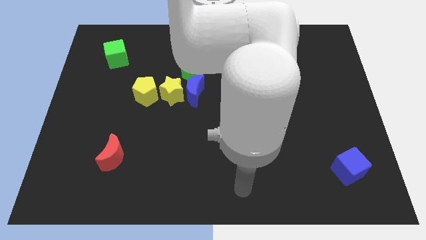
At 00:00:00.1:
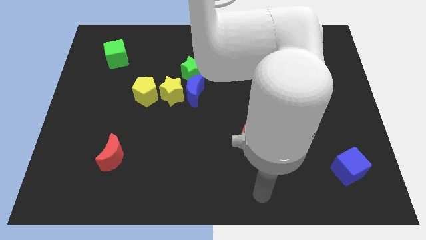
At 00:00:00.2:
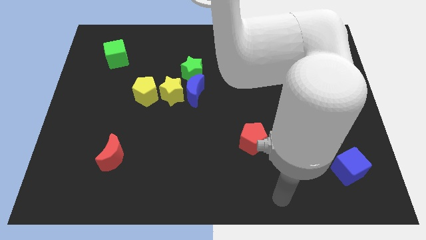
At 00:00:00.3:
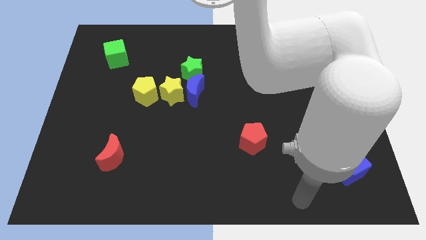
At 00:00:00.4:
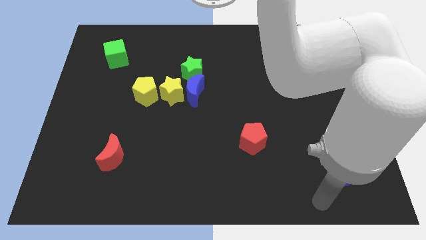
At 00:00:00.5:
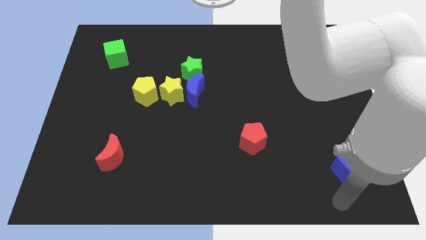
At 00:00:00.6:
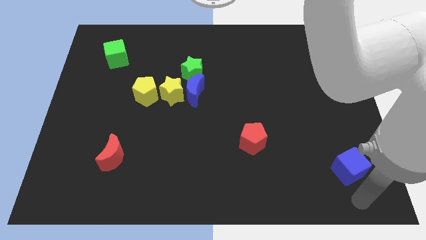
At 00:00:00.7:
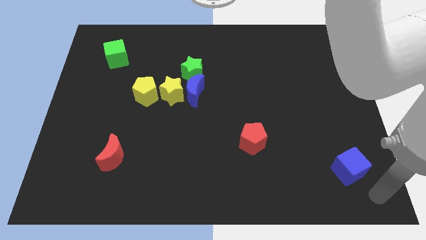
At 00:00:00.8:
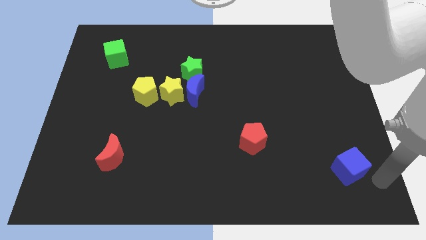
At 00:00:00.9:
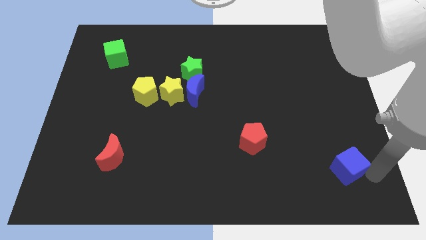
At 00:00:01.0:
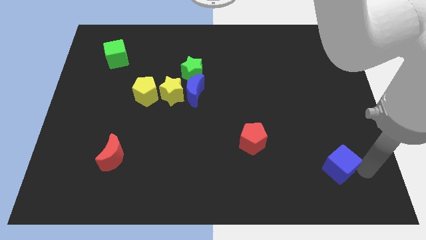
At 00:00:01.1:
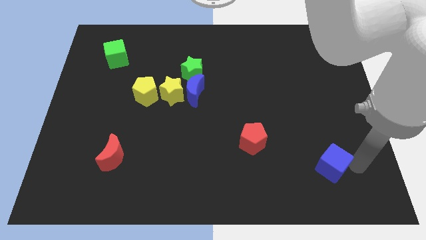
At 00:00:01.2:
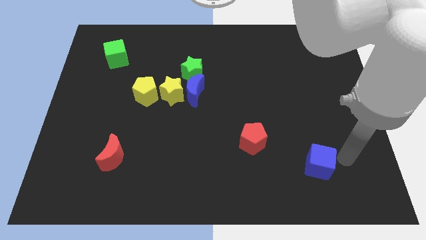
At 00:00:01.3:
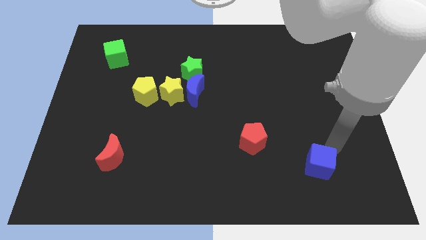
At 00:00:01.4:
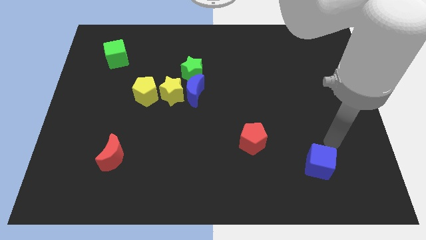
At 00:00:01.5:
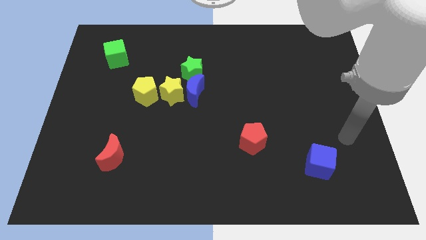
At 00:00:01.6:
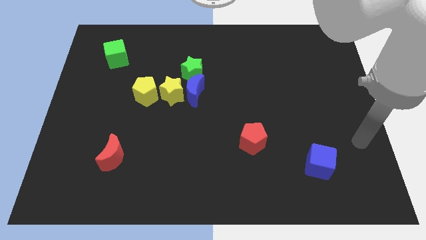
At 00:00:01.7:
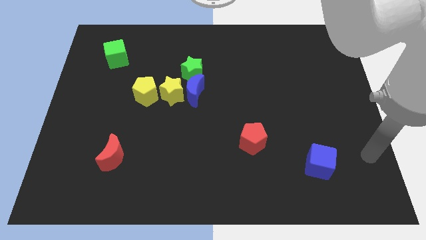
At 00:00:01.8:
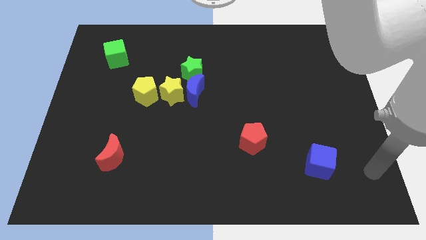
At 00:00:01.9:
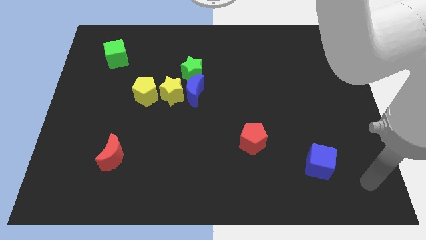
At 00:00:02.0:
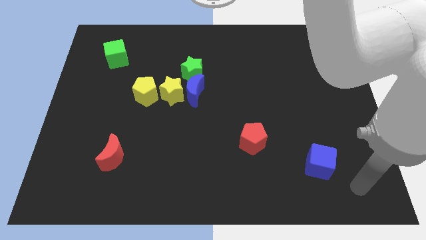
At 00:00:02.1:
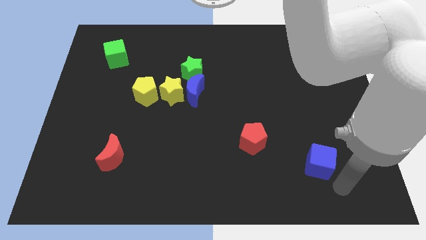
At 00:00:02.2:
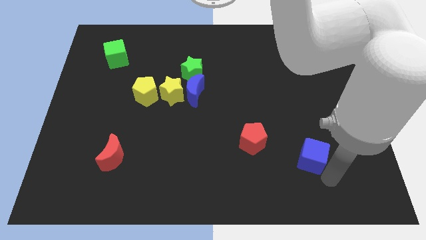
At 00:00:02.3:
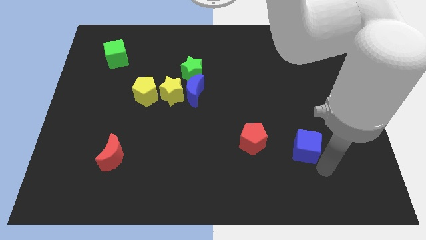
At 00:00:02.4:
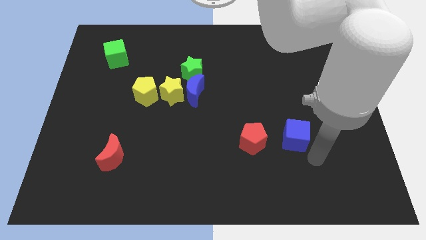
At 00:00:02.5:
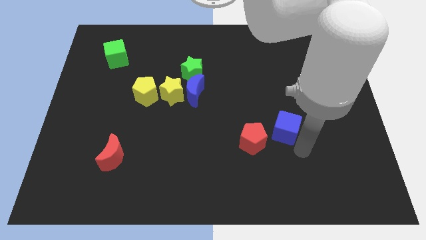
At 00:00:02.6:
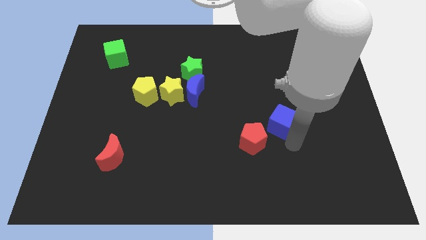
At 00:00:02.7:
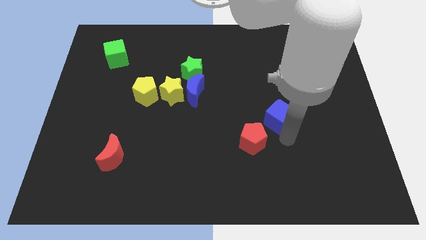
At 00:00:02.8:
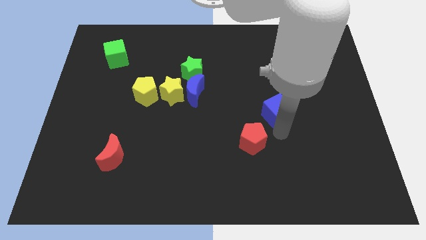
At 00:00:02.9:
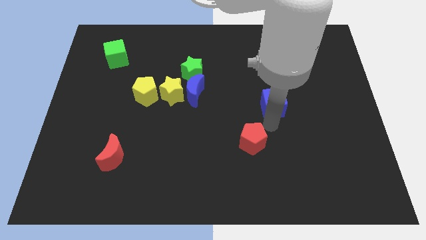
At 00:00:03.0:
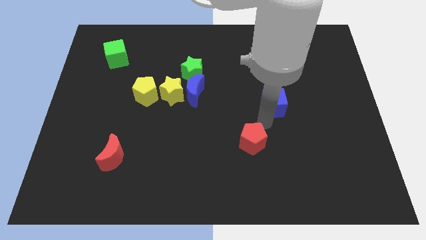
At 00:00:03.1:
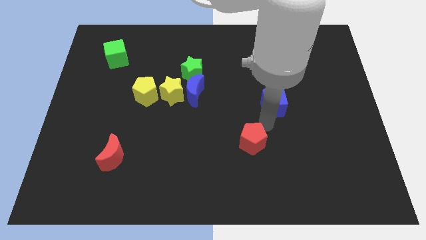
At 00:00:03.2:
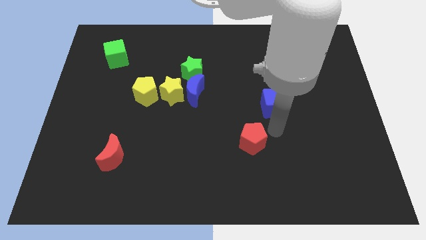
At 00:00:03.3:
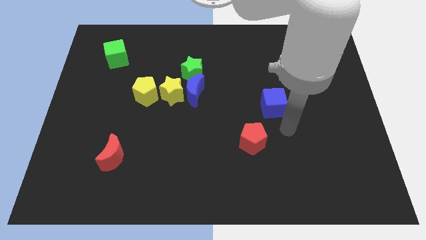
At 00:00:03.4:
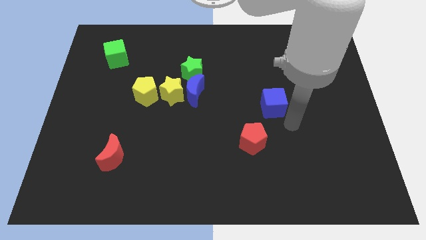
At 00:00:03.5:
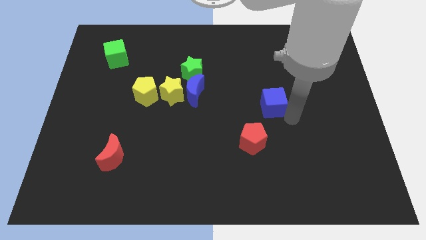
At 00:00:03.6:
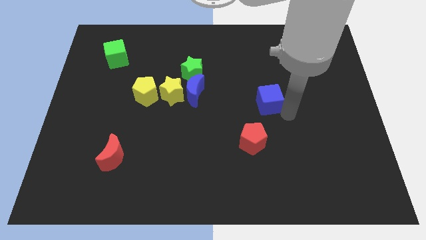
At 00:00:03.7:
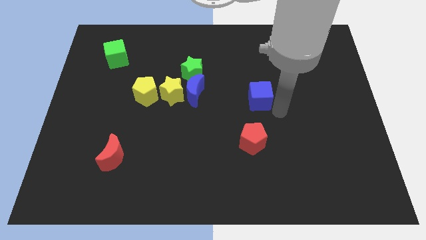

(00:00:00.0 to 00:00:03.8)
place blue cube above red crescent

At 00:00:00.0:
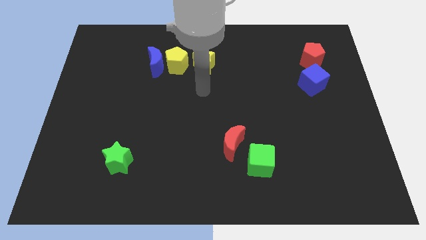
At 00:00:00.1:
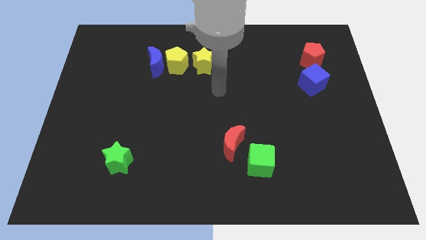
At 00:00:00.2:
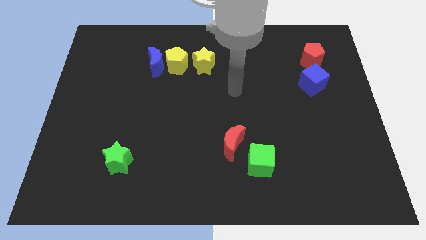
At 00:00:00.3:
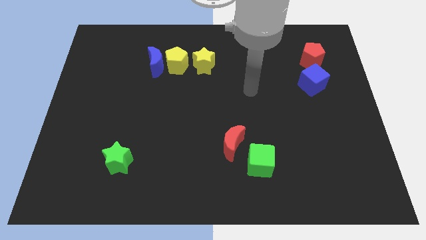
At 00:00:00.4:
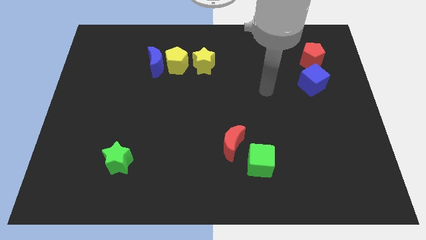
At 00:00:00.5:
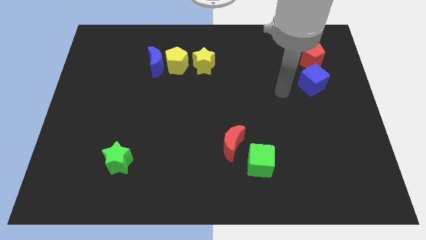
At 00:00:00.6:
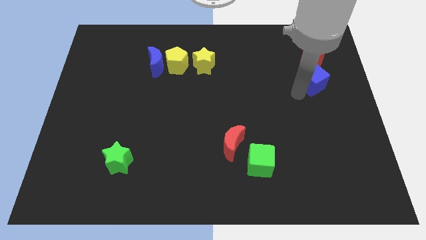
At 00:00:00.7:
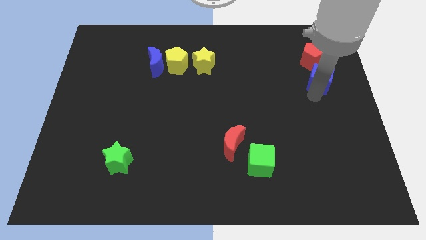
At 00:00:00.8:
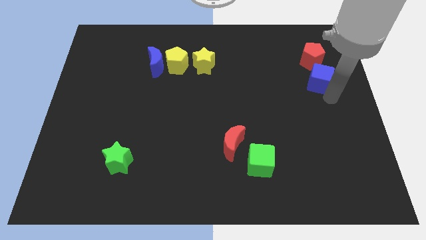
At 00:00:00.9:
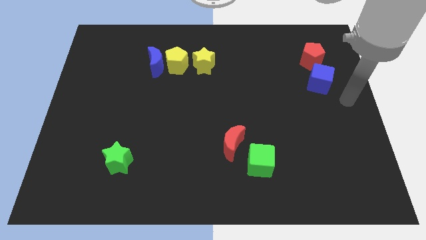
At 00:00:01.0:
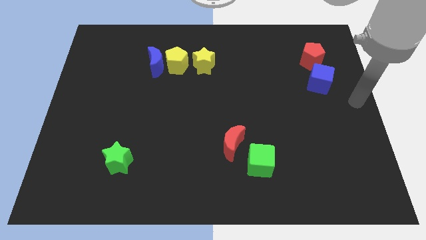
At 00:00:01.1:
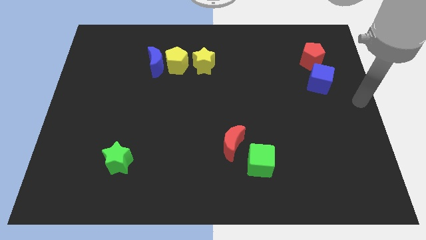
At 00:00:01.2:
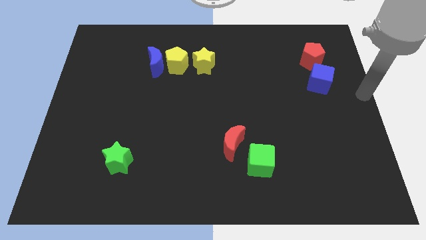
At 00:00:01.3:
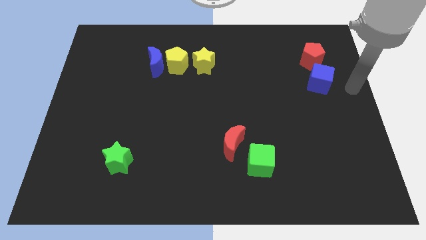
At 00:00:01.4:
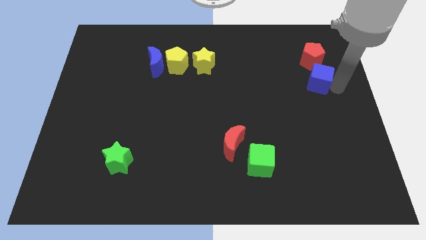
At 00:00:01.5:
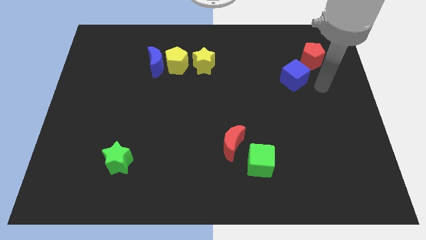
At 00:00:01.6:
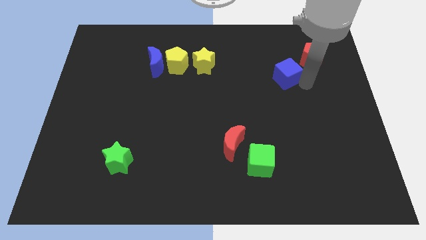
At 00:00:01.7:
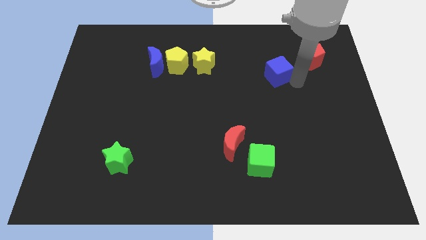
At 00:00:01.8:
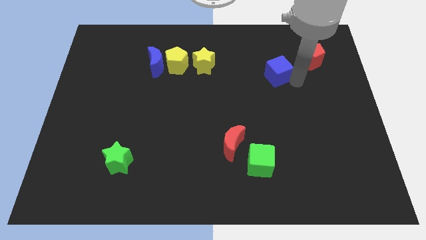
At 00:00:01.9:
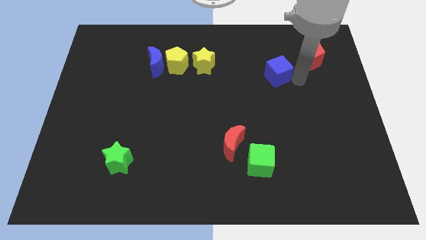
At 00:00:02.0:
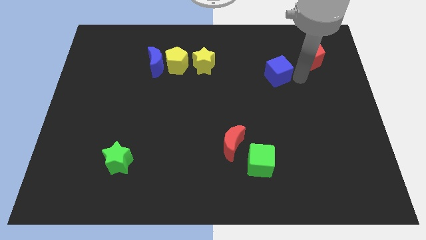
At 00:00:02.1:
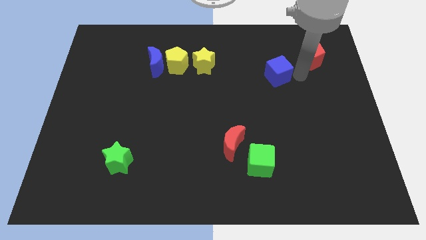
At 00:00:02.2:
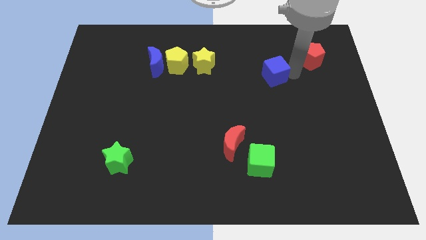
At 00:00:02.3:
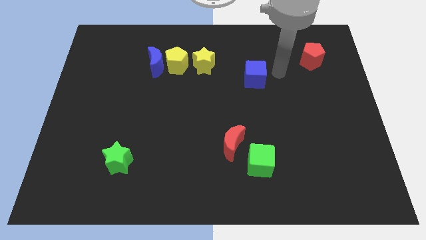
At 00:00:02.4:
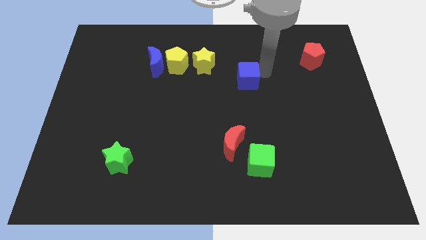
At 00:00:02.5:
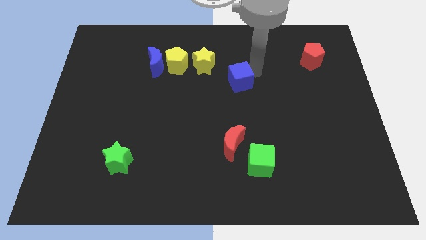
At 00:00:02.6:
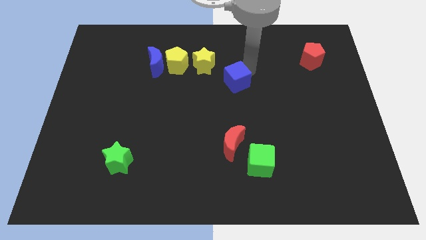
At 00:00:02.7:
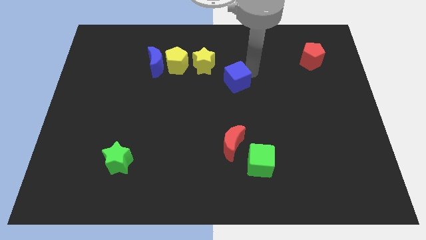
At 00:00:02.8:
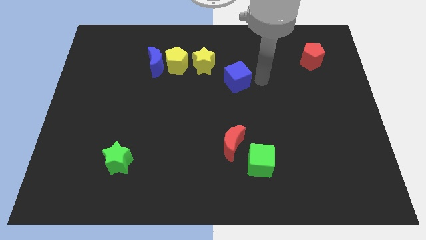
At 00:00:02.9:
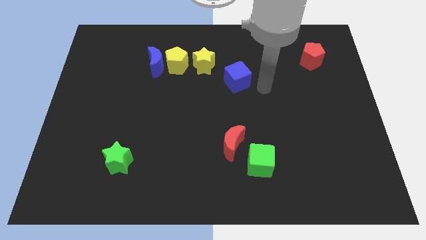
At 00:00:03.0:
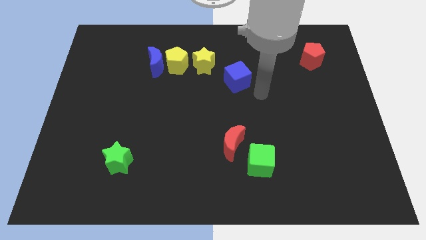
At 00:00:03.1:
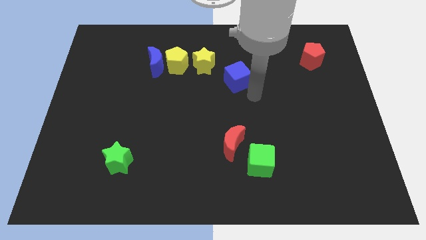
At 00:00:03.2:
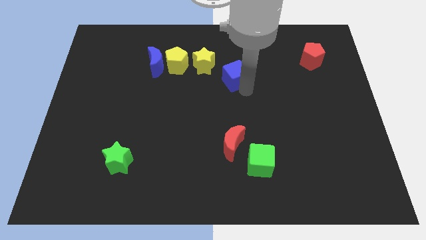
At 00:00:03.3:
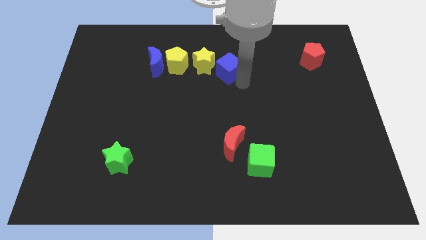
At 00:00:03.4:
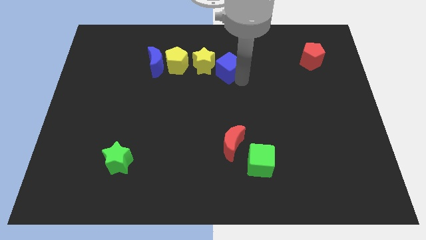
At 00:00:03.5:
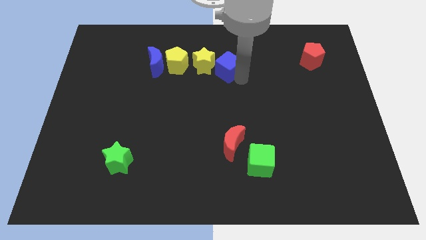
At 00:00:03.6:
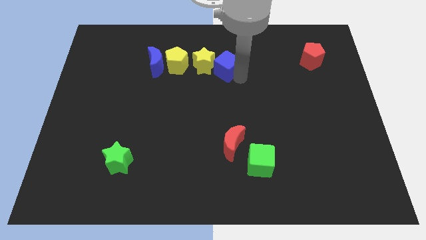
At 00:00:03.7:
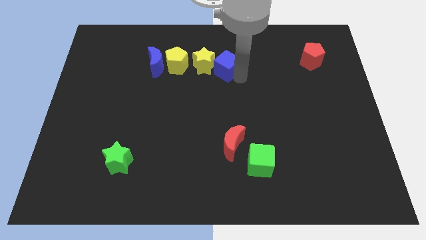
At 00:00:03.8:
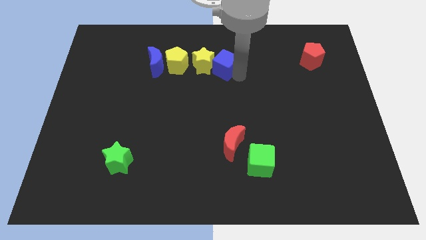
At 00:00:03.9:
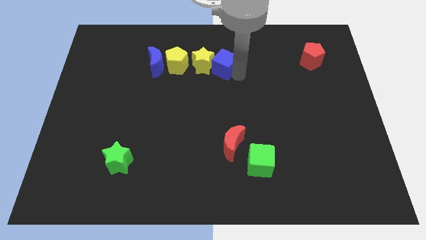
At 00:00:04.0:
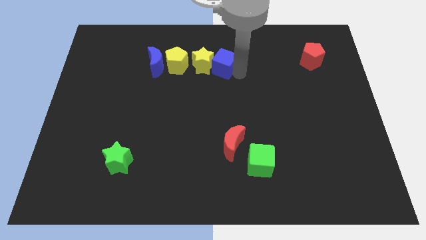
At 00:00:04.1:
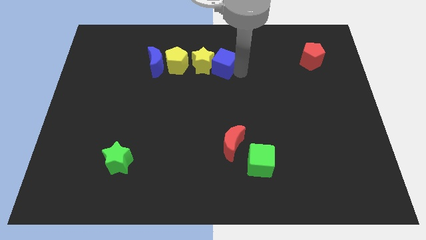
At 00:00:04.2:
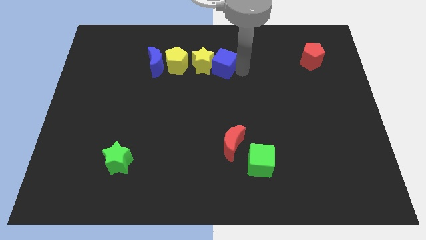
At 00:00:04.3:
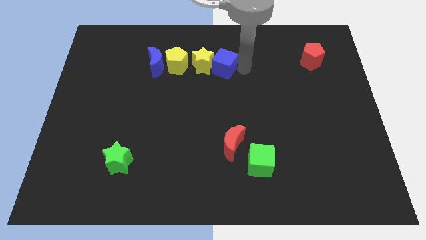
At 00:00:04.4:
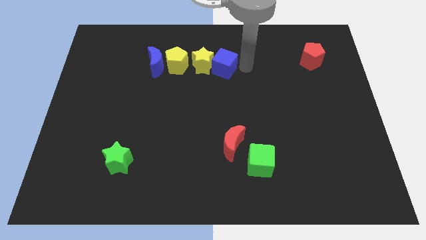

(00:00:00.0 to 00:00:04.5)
move the blue cube into the yellow star

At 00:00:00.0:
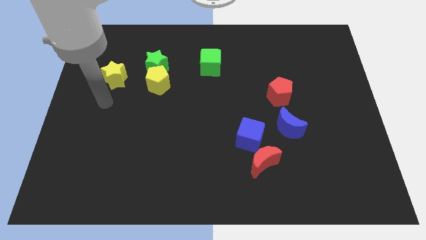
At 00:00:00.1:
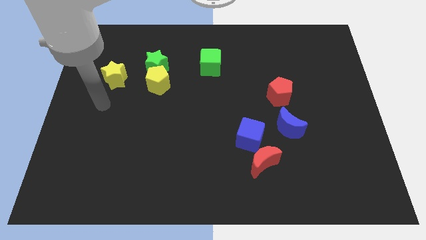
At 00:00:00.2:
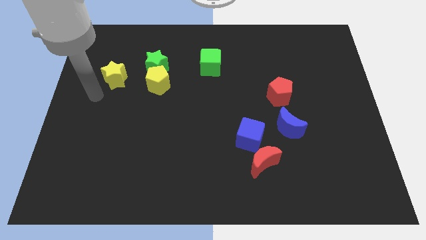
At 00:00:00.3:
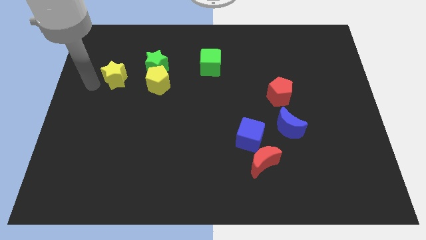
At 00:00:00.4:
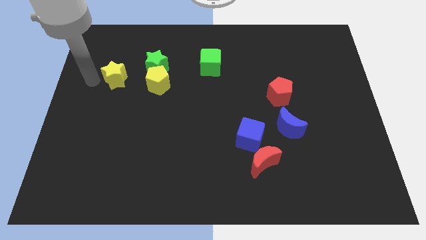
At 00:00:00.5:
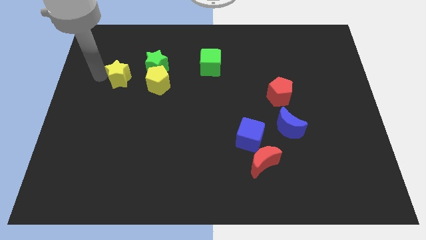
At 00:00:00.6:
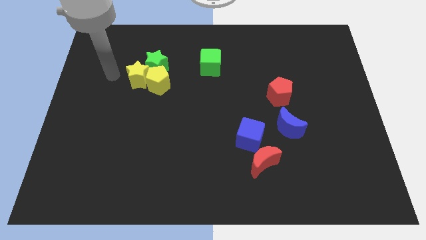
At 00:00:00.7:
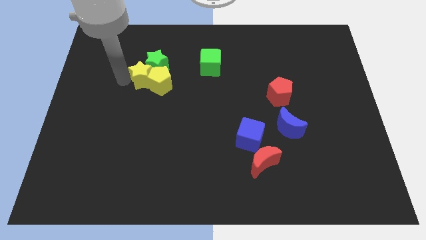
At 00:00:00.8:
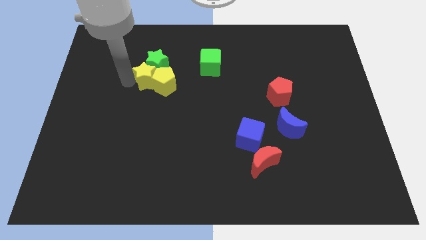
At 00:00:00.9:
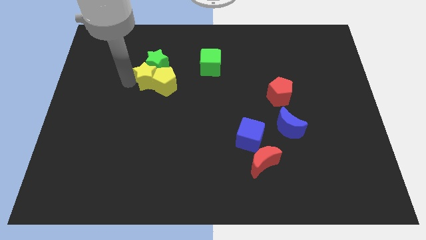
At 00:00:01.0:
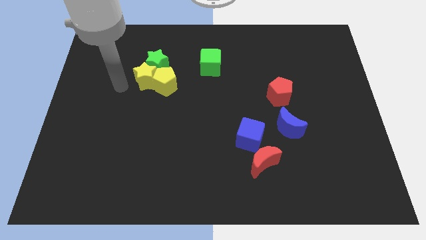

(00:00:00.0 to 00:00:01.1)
push yellow star into yellow pentagon
